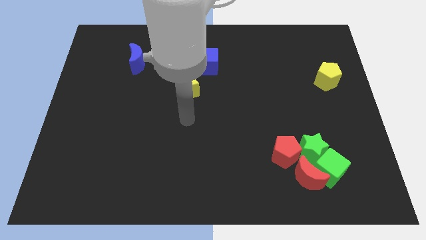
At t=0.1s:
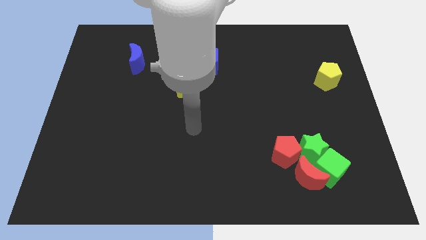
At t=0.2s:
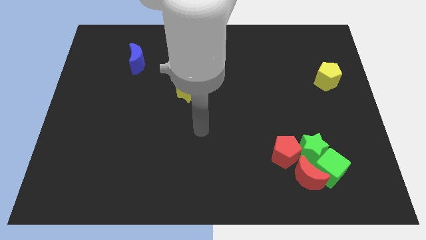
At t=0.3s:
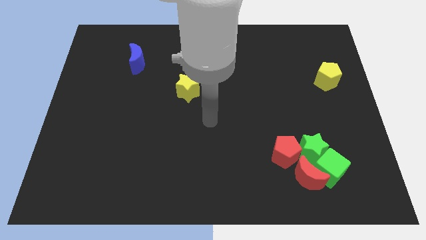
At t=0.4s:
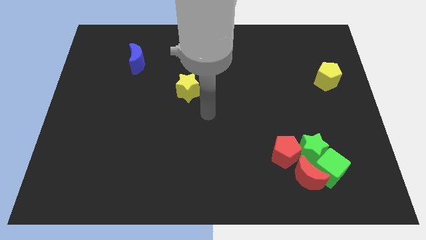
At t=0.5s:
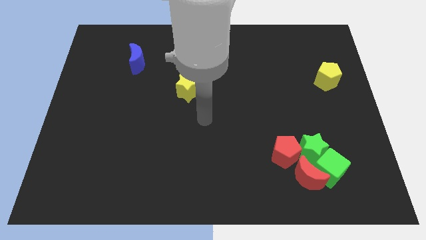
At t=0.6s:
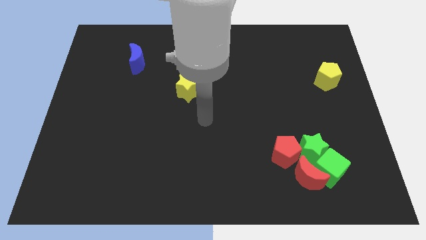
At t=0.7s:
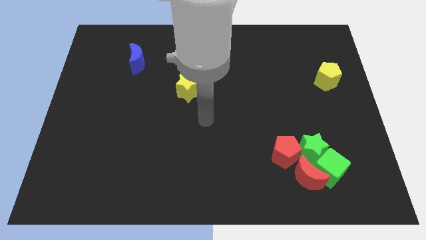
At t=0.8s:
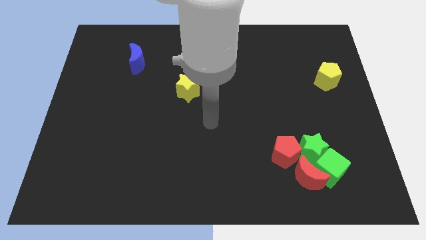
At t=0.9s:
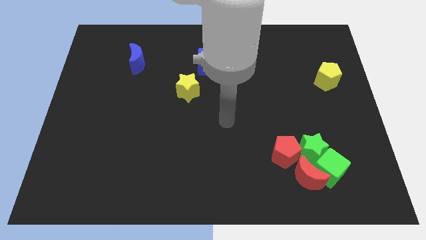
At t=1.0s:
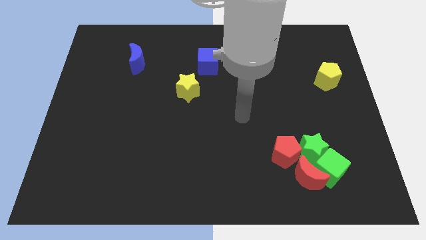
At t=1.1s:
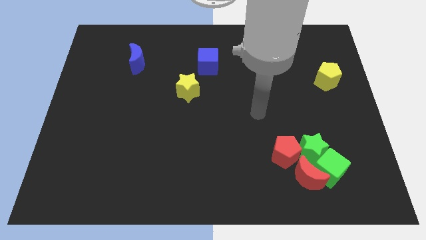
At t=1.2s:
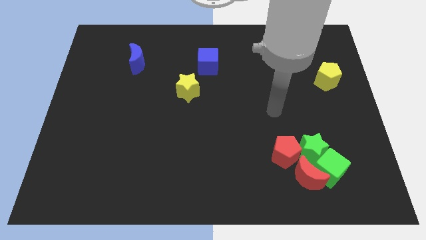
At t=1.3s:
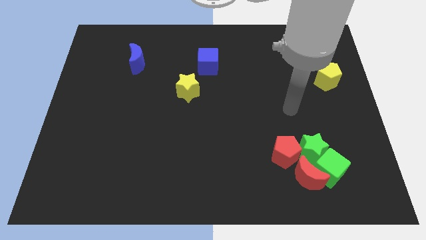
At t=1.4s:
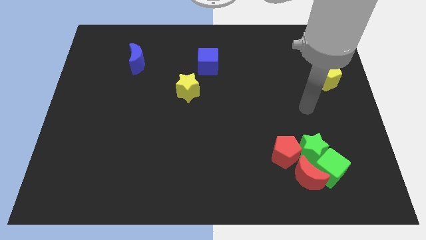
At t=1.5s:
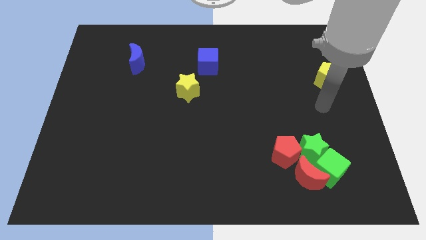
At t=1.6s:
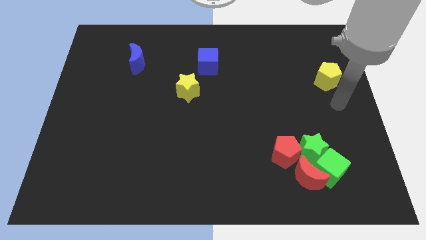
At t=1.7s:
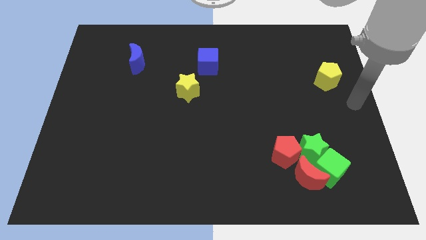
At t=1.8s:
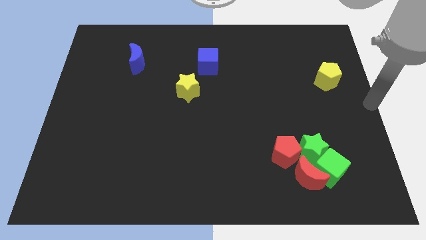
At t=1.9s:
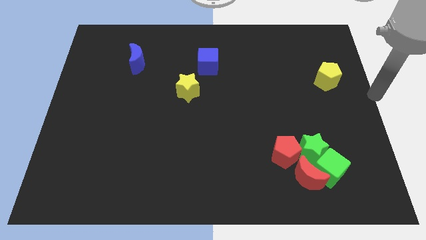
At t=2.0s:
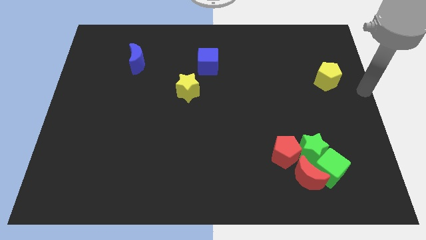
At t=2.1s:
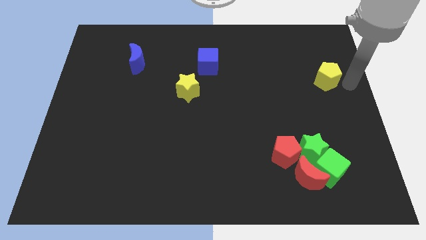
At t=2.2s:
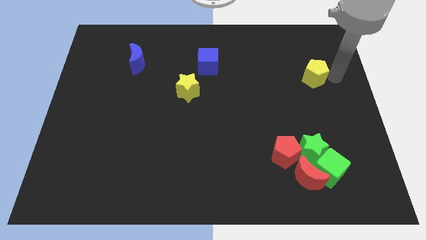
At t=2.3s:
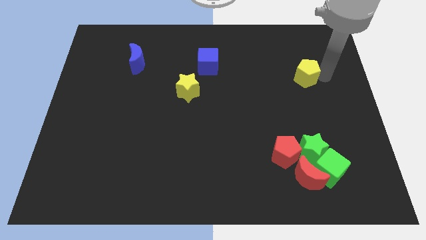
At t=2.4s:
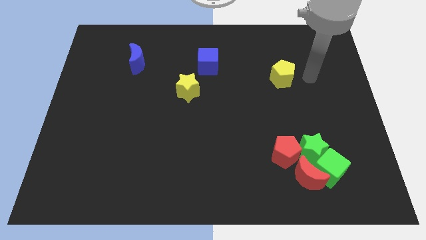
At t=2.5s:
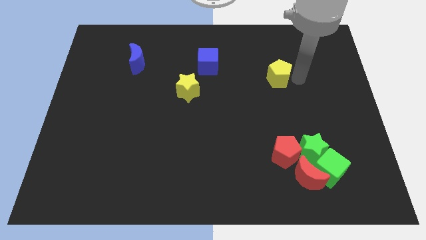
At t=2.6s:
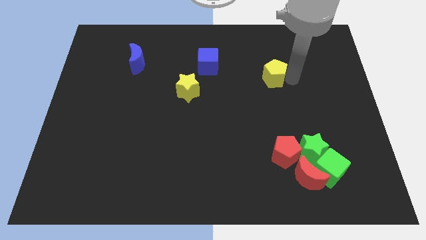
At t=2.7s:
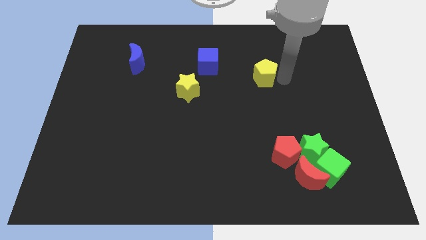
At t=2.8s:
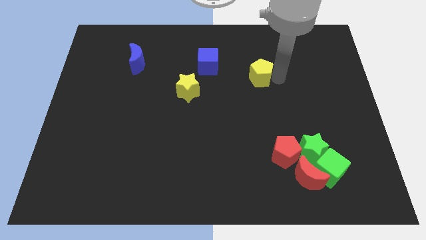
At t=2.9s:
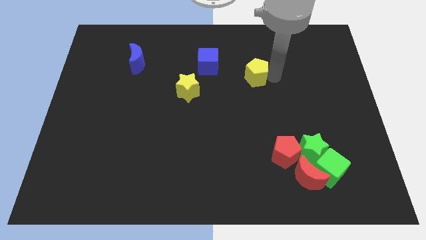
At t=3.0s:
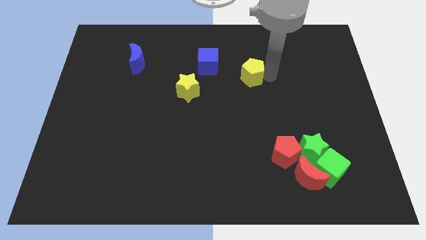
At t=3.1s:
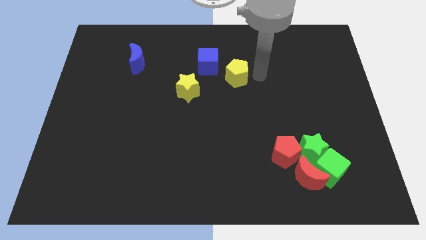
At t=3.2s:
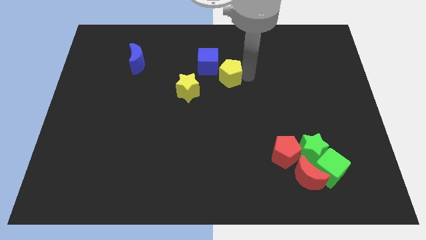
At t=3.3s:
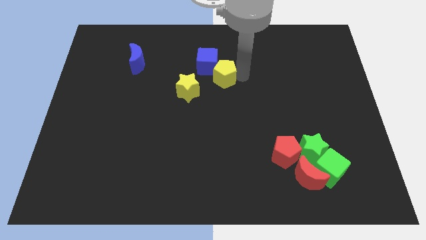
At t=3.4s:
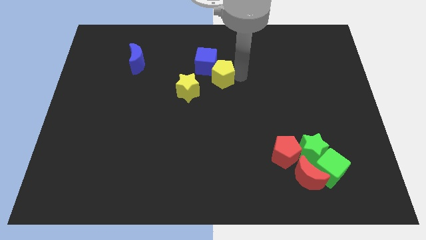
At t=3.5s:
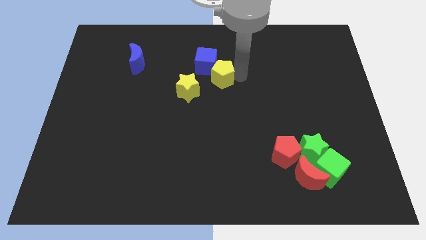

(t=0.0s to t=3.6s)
move the yellow pentagon to the bottom right of the blue cube

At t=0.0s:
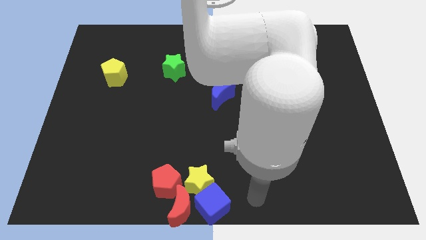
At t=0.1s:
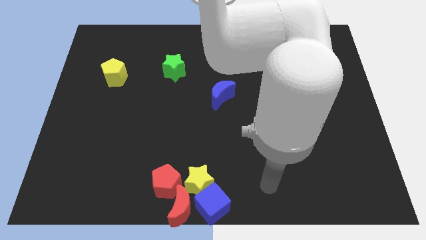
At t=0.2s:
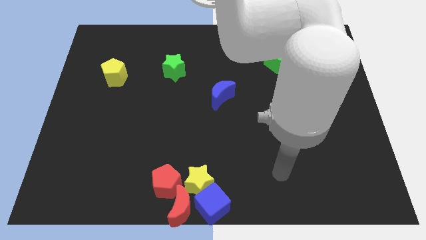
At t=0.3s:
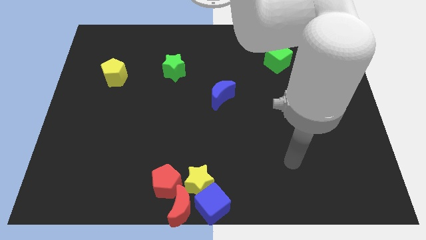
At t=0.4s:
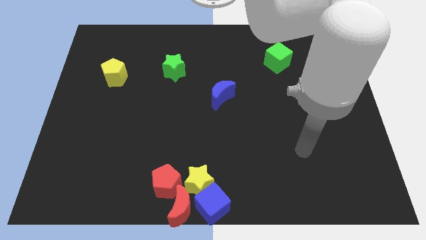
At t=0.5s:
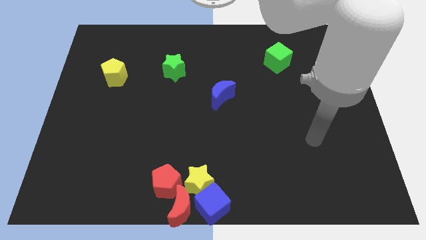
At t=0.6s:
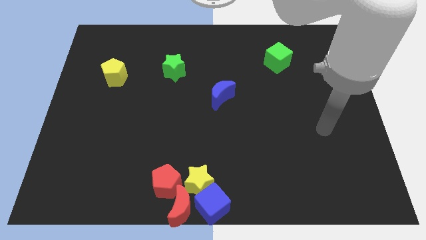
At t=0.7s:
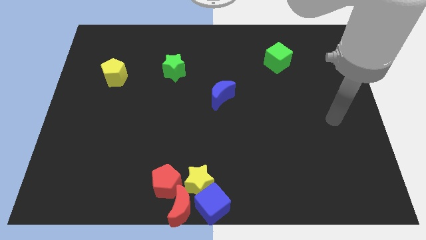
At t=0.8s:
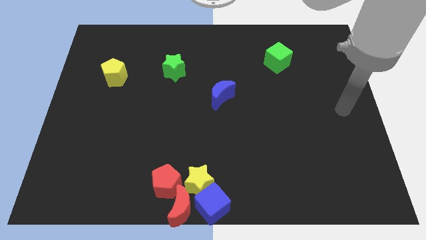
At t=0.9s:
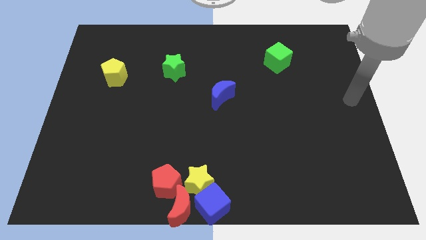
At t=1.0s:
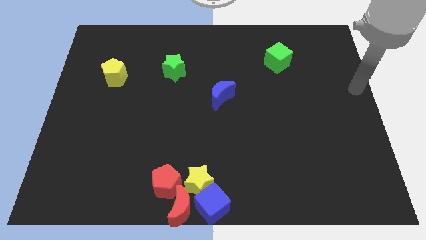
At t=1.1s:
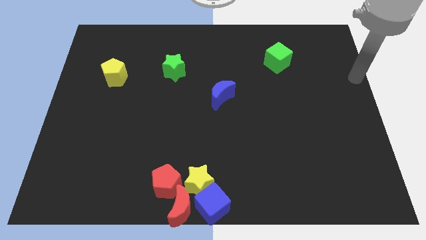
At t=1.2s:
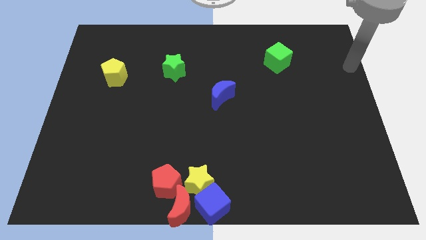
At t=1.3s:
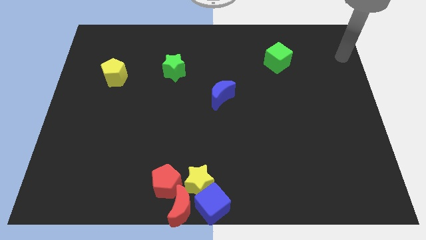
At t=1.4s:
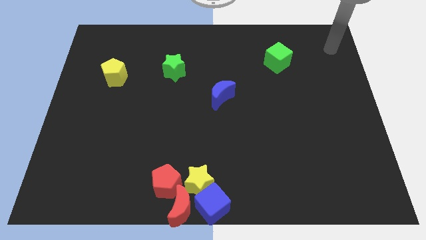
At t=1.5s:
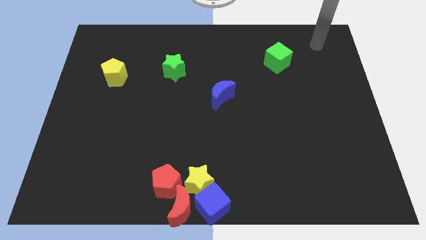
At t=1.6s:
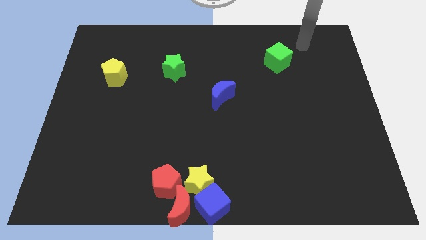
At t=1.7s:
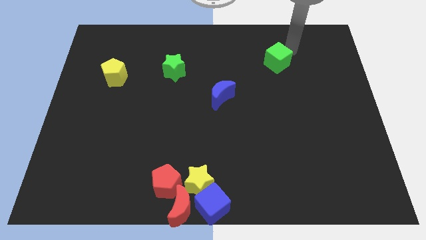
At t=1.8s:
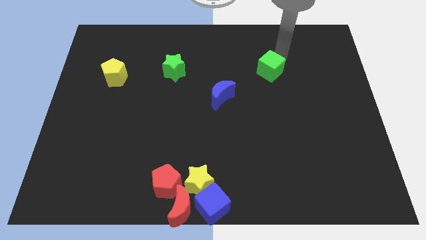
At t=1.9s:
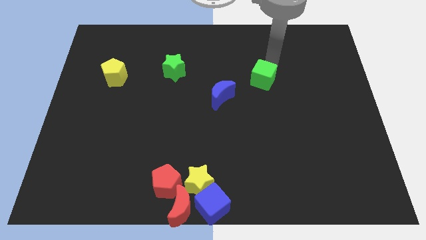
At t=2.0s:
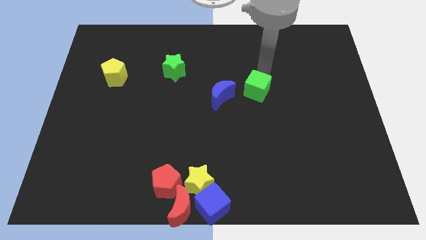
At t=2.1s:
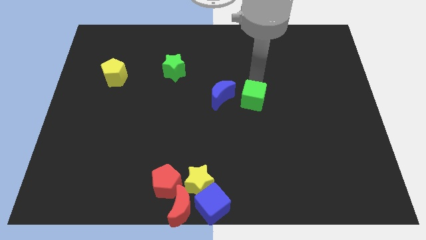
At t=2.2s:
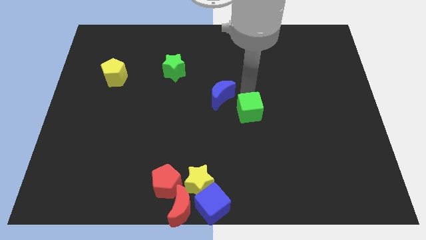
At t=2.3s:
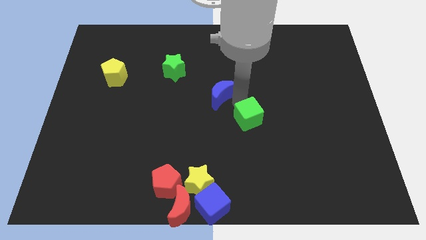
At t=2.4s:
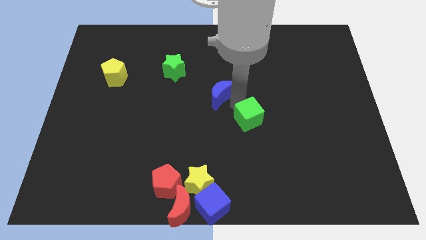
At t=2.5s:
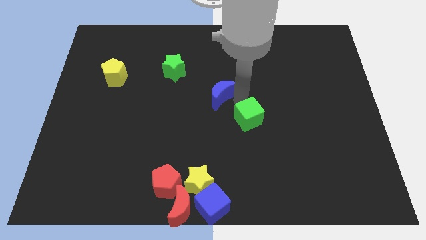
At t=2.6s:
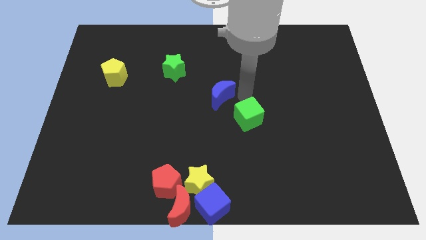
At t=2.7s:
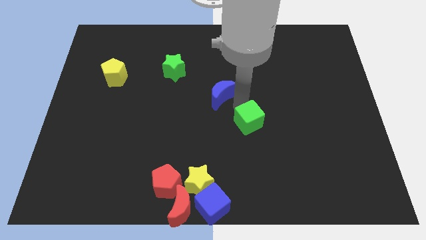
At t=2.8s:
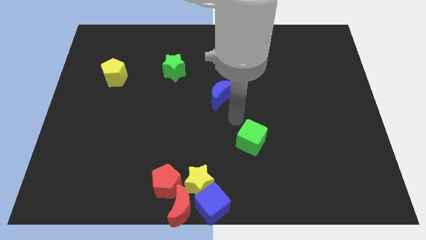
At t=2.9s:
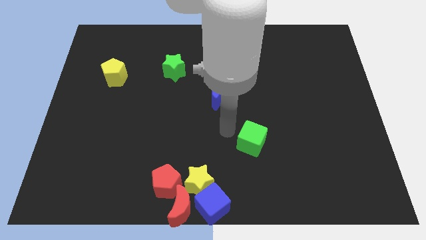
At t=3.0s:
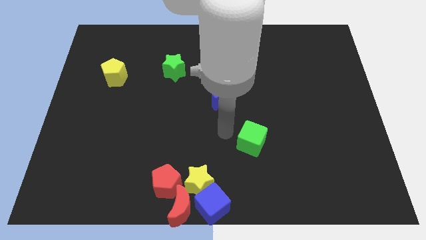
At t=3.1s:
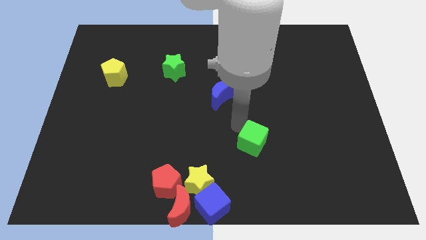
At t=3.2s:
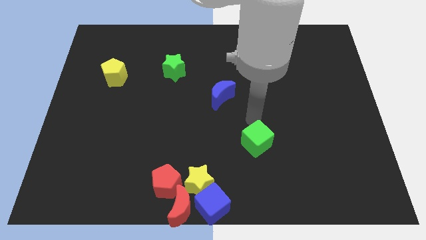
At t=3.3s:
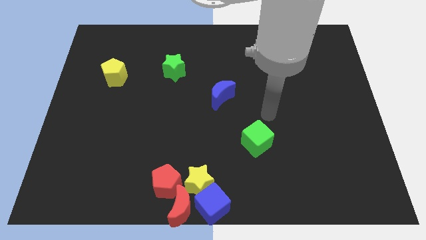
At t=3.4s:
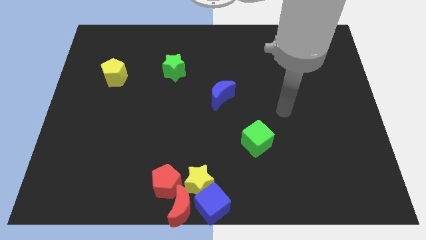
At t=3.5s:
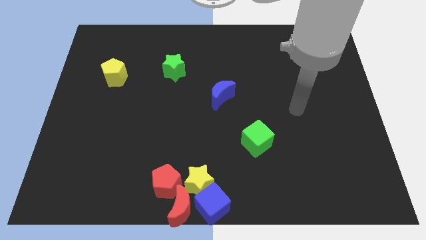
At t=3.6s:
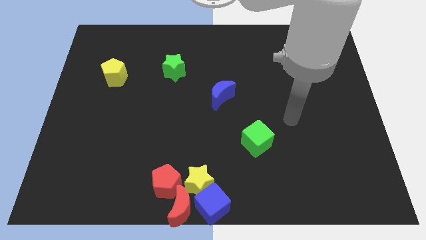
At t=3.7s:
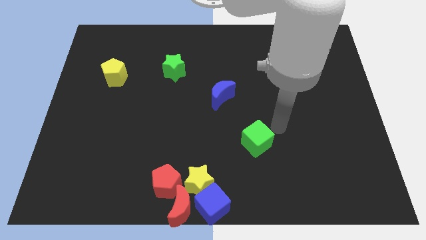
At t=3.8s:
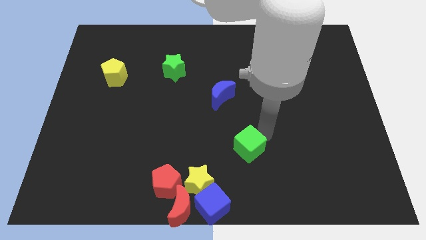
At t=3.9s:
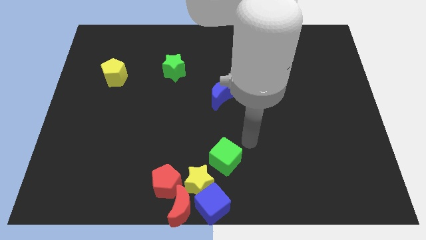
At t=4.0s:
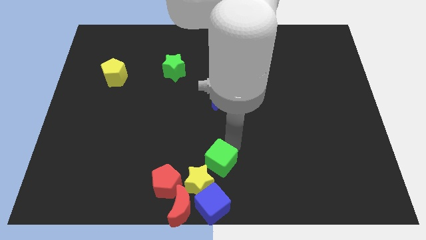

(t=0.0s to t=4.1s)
push the green cube to the top right of the green cube

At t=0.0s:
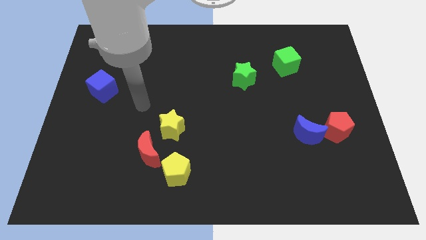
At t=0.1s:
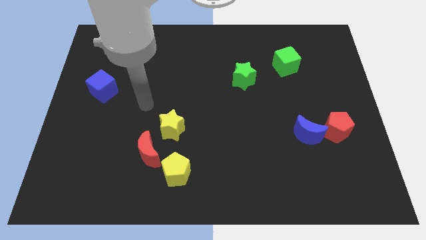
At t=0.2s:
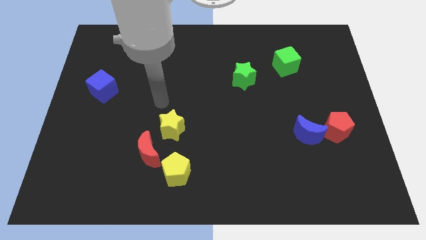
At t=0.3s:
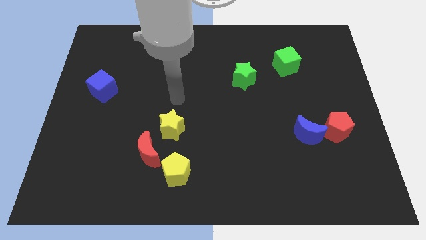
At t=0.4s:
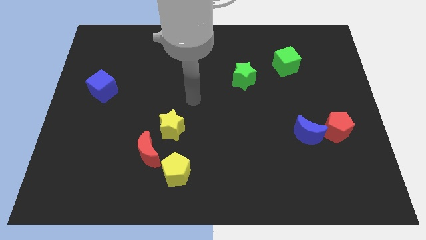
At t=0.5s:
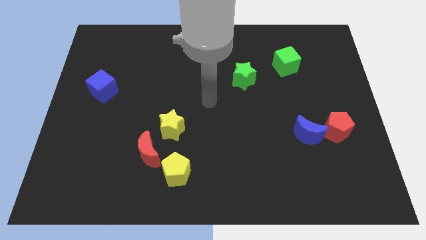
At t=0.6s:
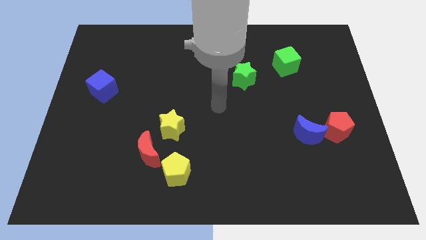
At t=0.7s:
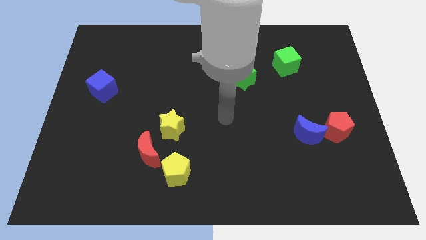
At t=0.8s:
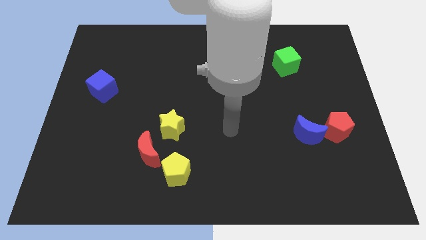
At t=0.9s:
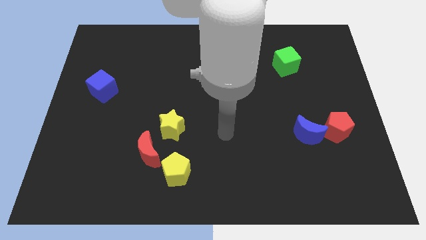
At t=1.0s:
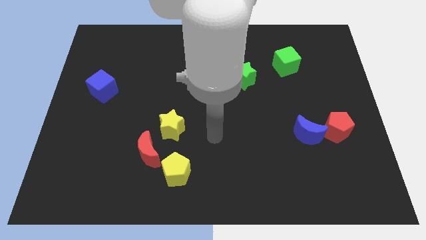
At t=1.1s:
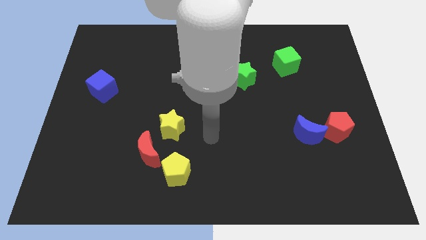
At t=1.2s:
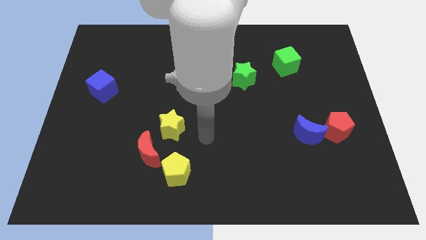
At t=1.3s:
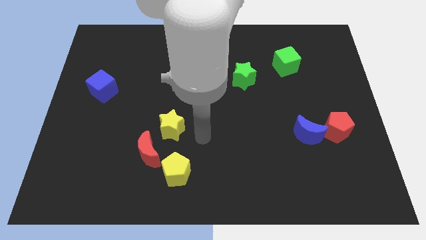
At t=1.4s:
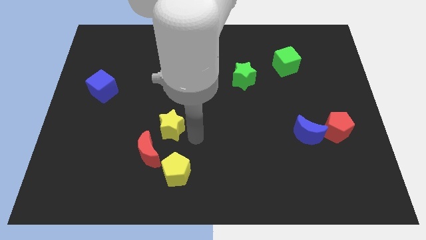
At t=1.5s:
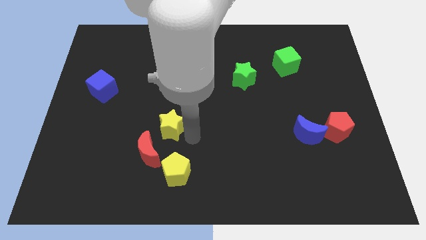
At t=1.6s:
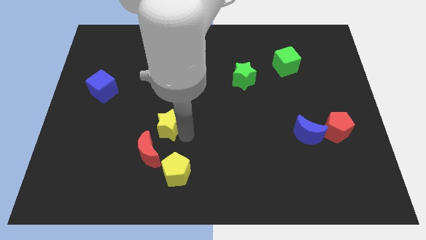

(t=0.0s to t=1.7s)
push the yellow star towards the center left of the board
